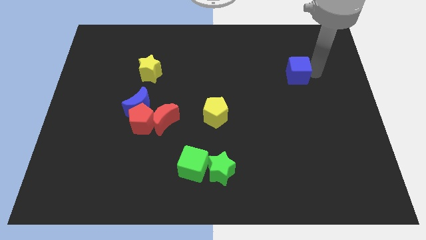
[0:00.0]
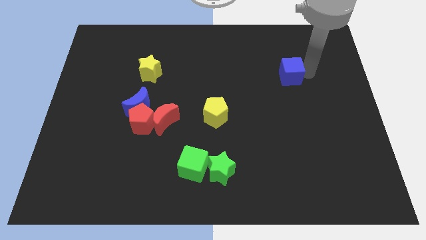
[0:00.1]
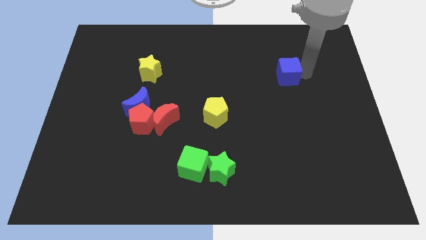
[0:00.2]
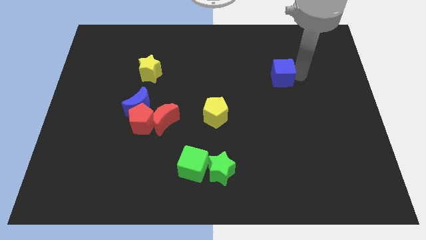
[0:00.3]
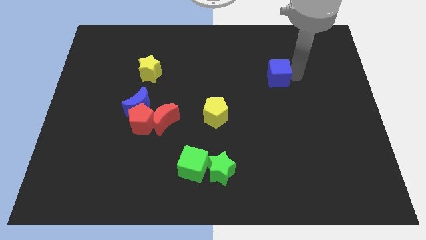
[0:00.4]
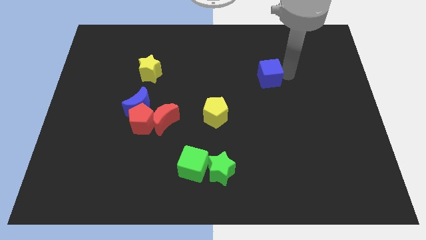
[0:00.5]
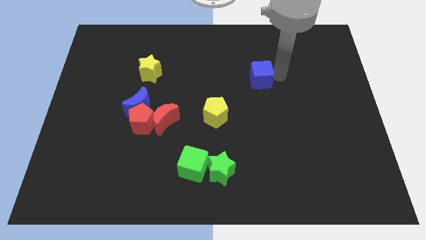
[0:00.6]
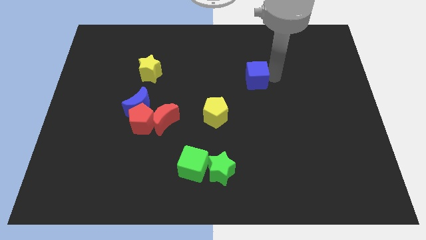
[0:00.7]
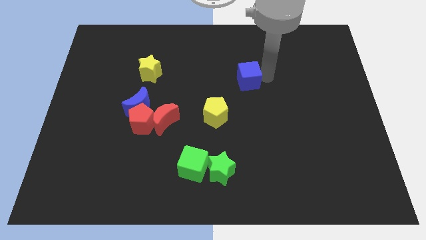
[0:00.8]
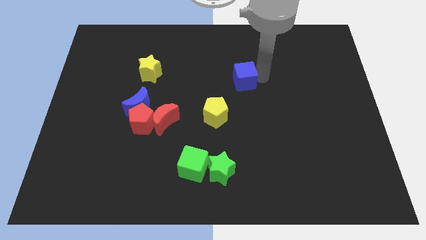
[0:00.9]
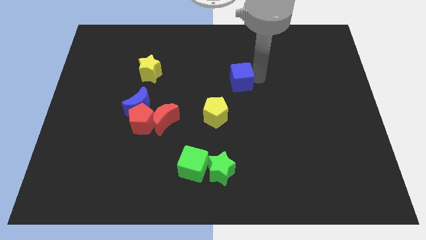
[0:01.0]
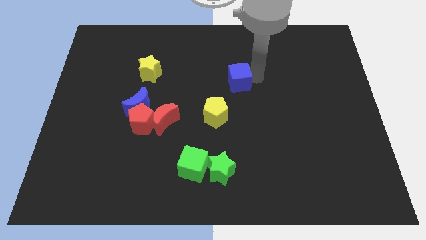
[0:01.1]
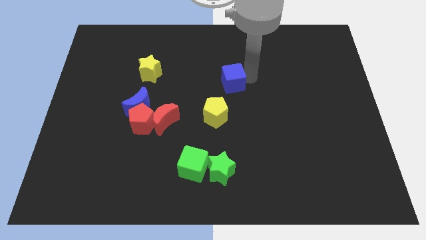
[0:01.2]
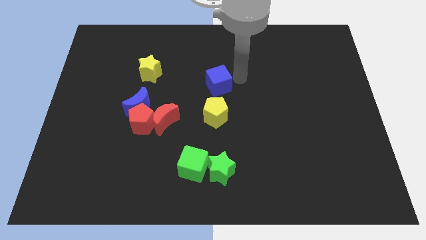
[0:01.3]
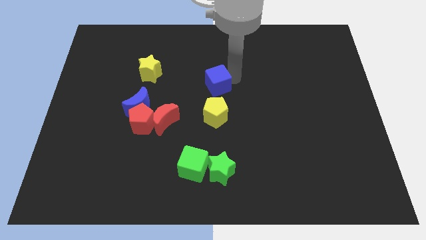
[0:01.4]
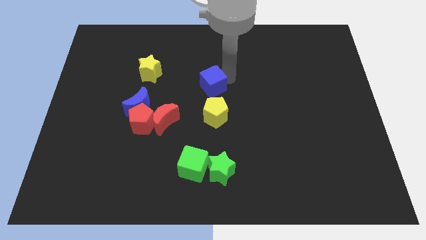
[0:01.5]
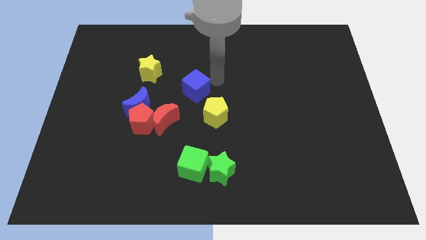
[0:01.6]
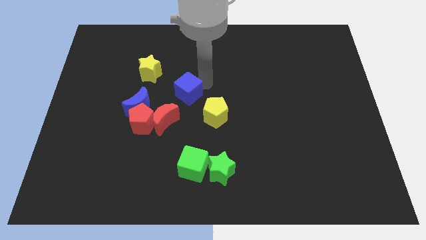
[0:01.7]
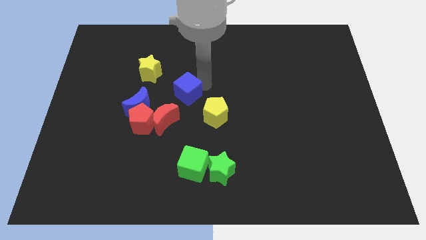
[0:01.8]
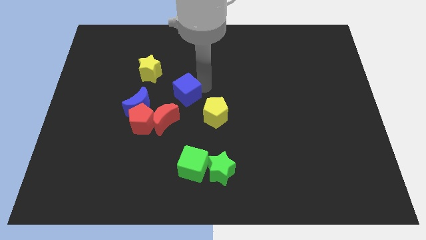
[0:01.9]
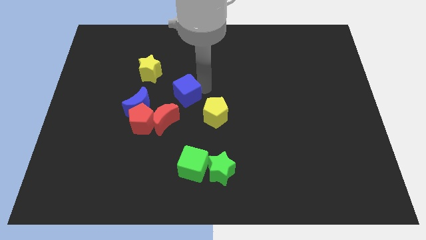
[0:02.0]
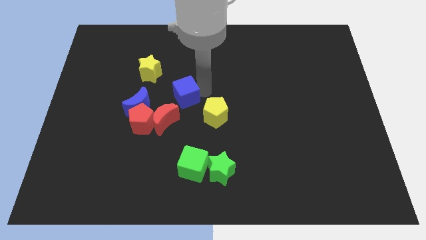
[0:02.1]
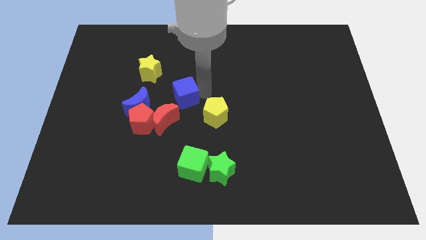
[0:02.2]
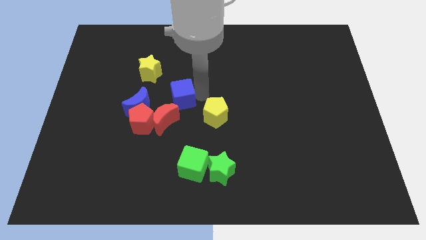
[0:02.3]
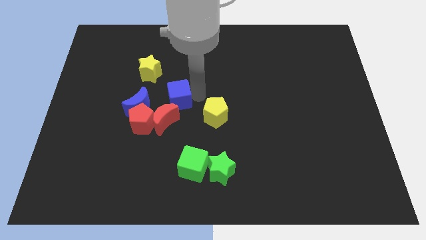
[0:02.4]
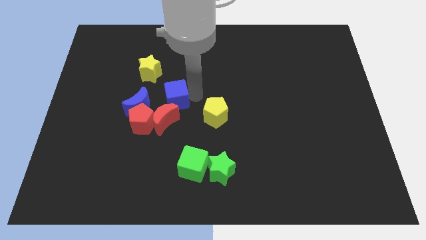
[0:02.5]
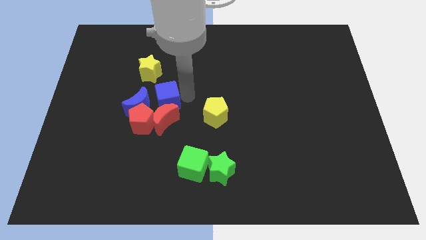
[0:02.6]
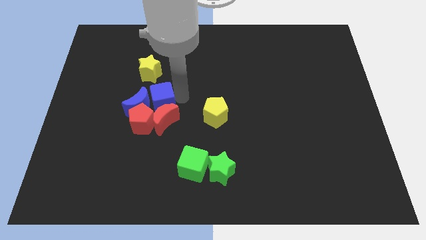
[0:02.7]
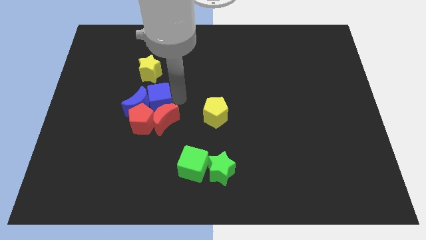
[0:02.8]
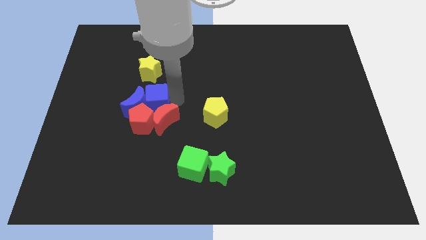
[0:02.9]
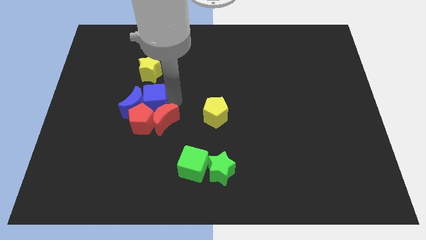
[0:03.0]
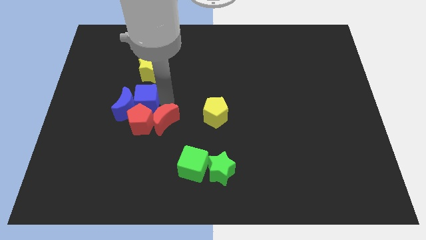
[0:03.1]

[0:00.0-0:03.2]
move the blue cube into the blue moon

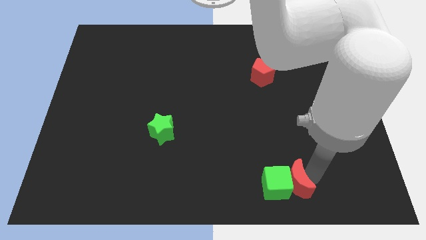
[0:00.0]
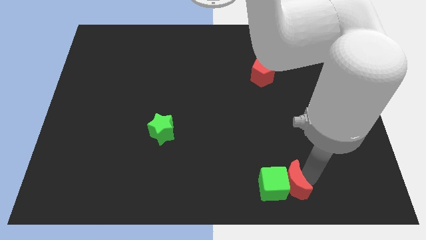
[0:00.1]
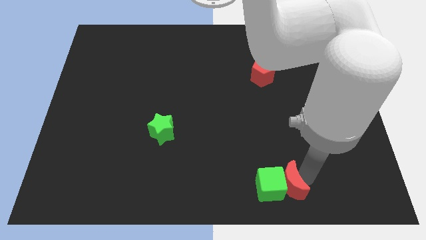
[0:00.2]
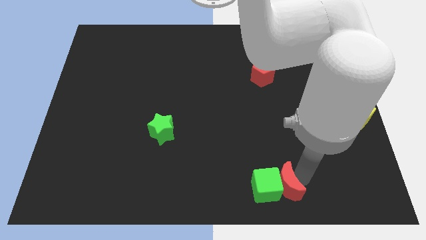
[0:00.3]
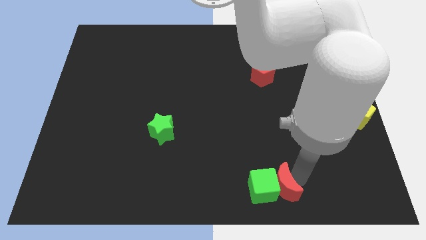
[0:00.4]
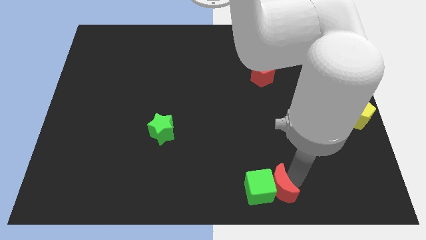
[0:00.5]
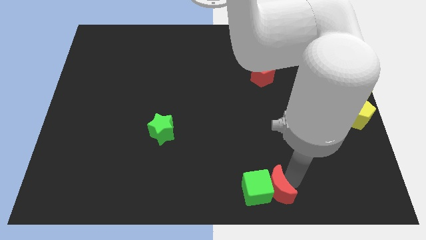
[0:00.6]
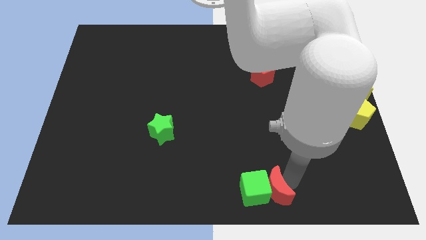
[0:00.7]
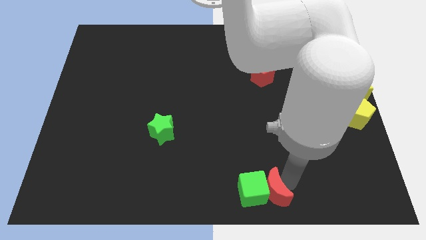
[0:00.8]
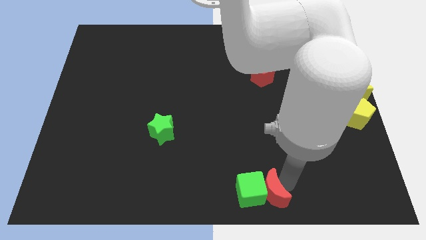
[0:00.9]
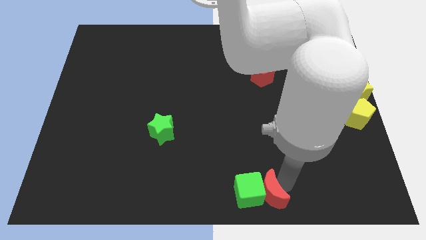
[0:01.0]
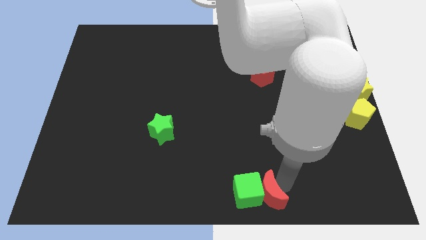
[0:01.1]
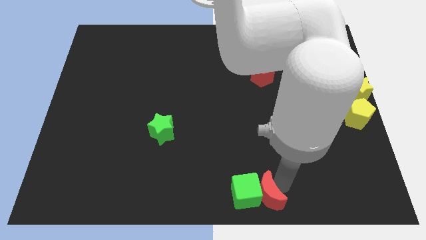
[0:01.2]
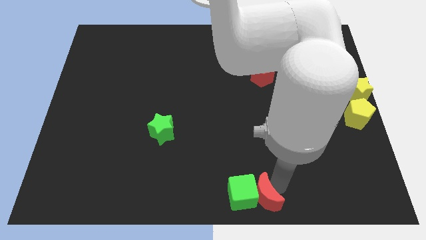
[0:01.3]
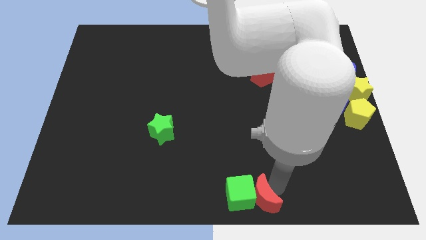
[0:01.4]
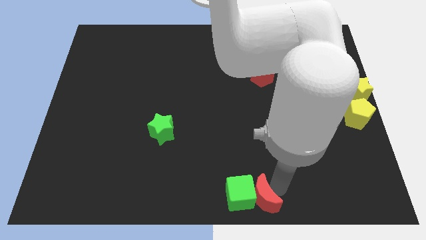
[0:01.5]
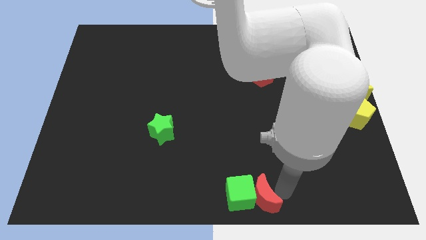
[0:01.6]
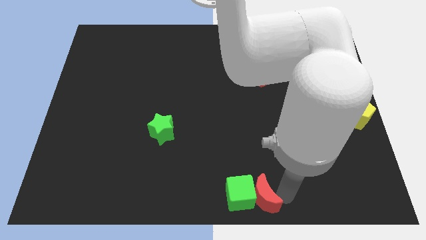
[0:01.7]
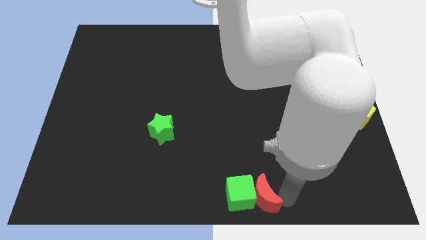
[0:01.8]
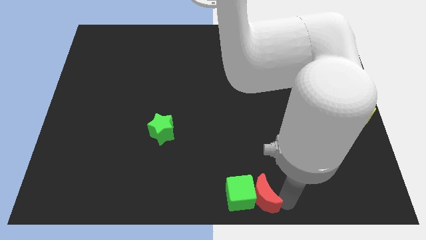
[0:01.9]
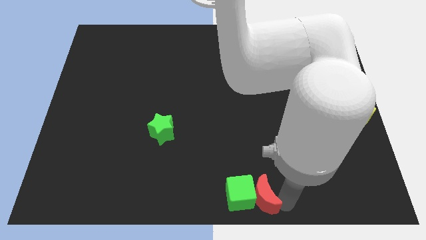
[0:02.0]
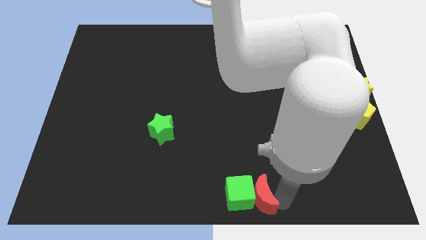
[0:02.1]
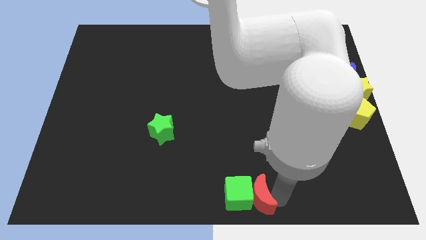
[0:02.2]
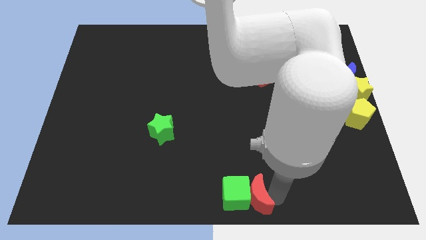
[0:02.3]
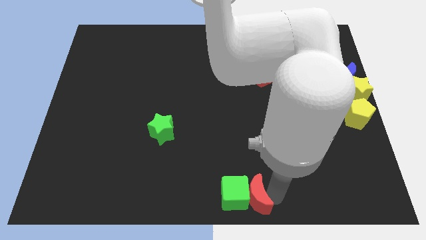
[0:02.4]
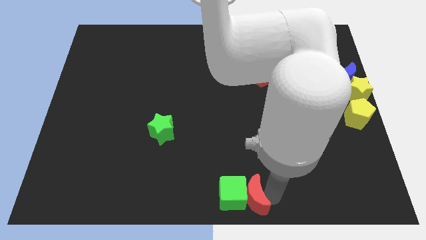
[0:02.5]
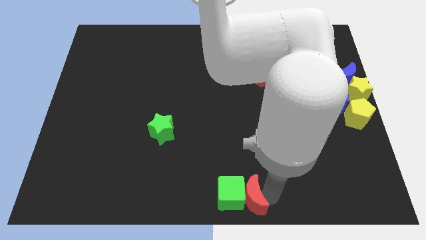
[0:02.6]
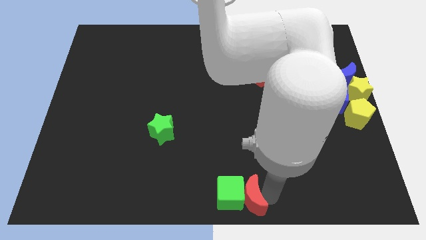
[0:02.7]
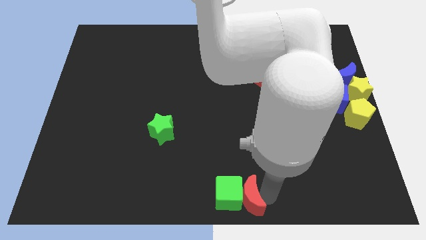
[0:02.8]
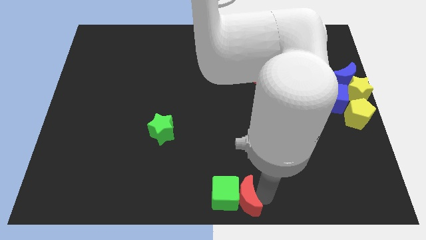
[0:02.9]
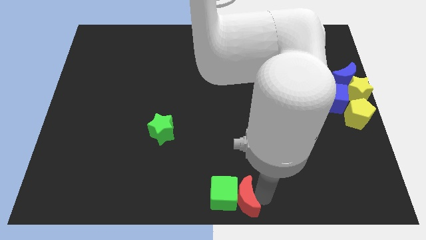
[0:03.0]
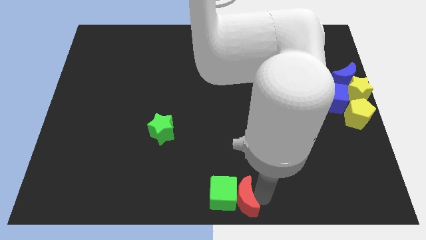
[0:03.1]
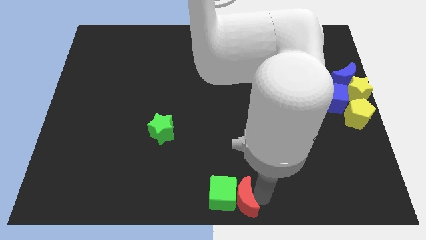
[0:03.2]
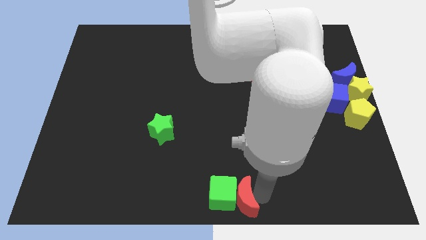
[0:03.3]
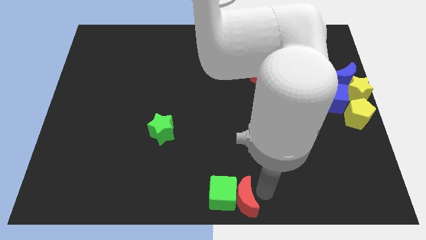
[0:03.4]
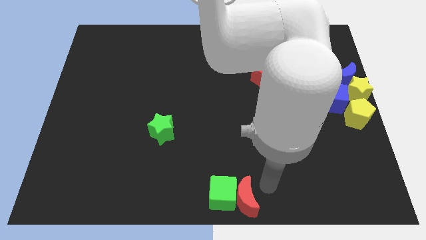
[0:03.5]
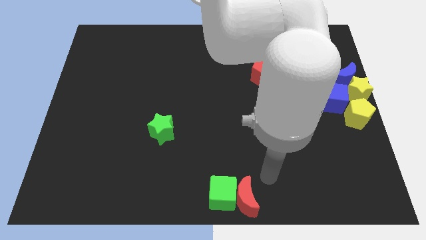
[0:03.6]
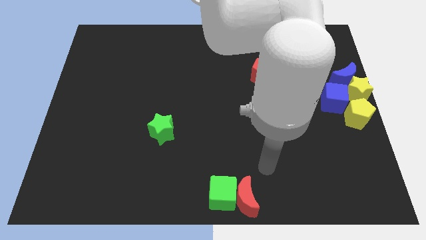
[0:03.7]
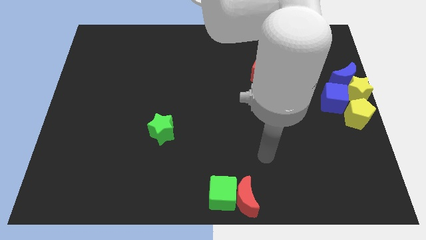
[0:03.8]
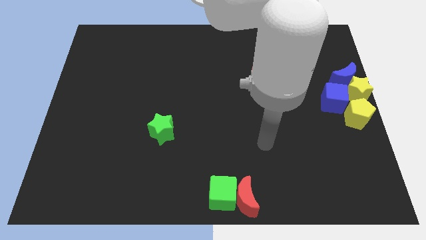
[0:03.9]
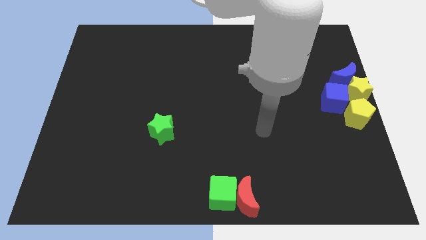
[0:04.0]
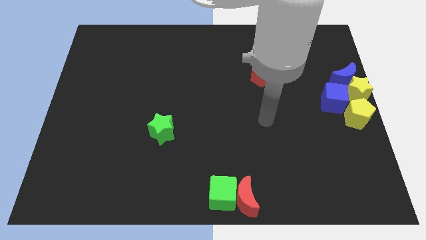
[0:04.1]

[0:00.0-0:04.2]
move the green cube with the help of red crescent towards the bottom center

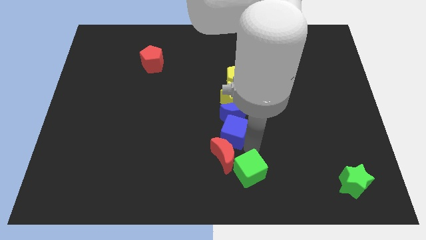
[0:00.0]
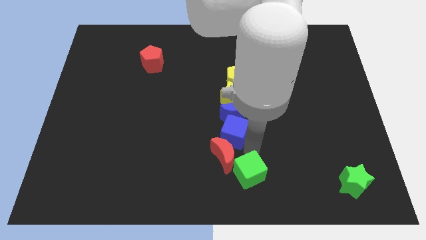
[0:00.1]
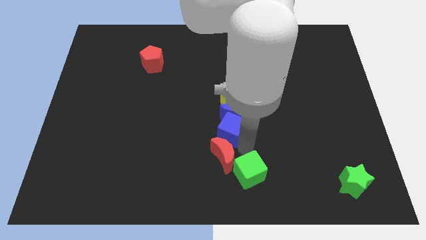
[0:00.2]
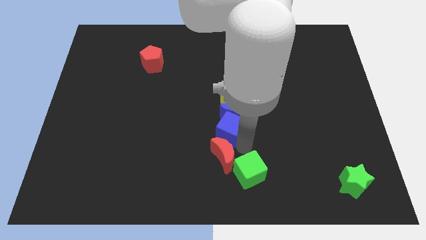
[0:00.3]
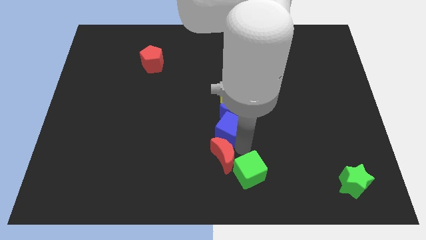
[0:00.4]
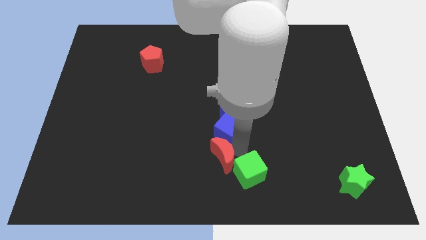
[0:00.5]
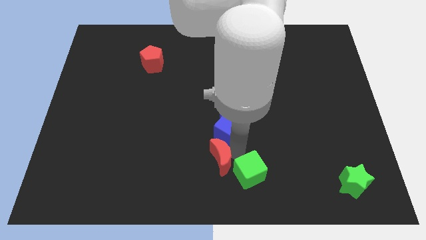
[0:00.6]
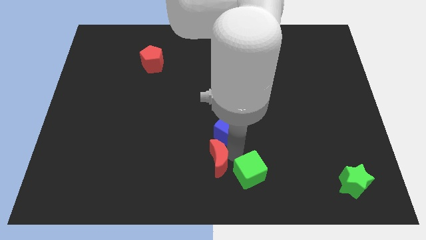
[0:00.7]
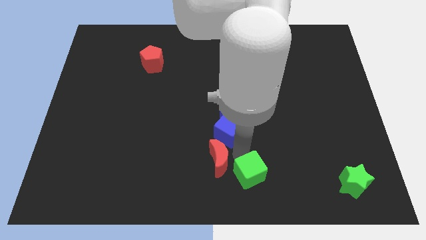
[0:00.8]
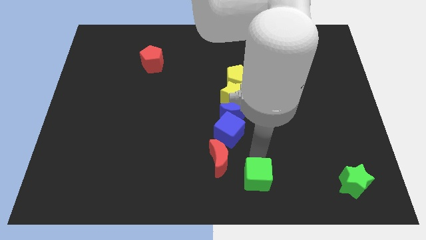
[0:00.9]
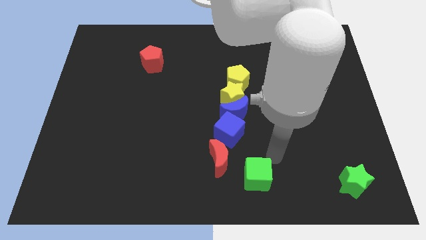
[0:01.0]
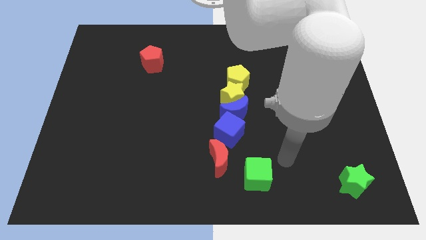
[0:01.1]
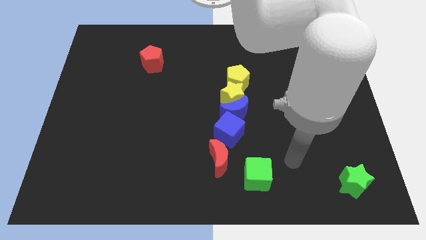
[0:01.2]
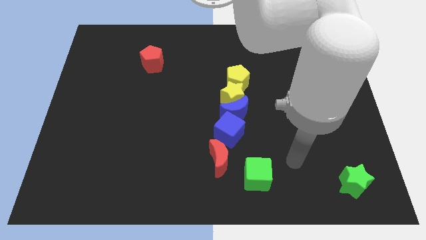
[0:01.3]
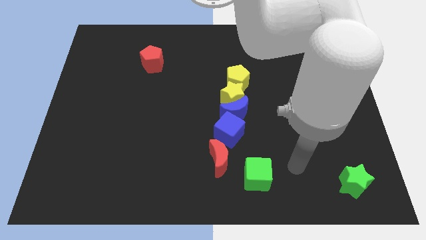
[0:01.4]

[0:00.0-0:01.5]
move blue cube below blue moon

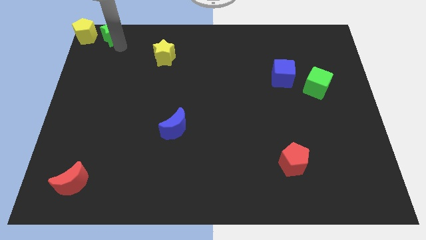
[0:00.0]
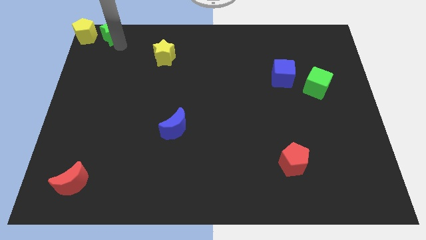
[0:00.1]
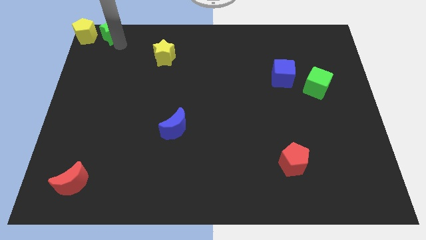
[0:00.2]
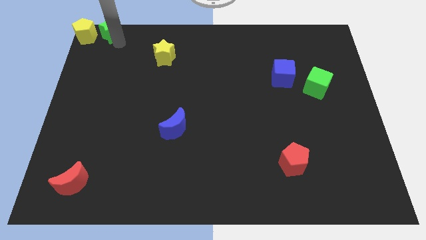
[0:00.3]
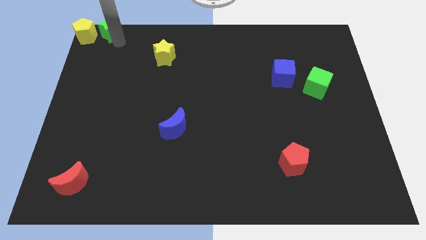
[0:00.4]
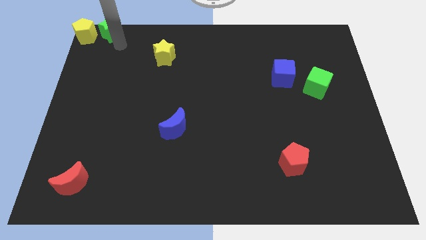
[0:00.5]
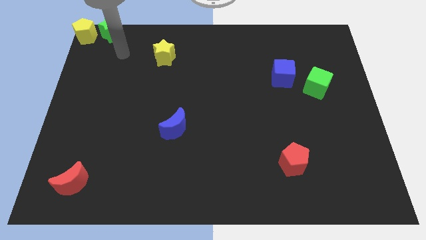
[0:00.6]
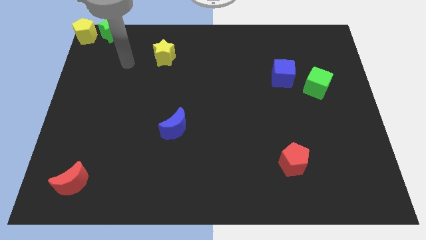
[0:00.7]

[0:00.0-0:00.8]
slide the green star to the top of the board
